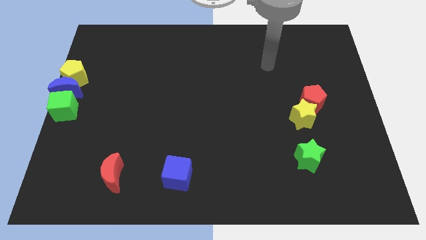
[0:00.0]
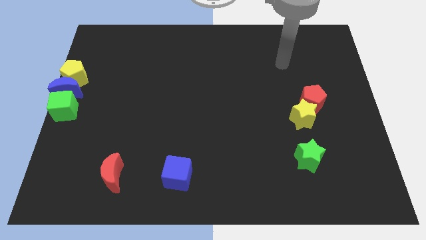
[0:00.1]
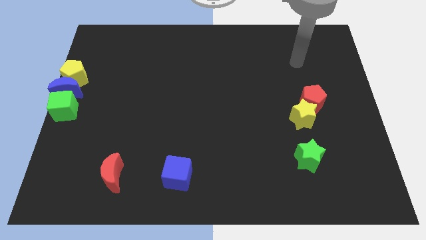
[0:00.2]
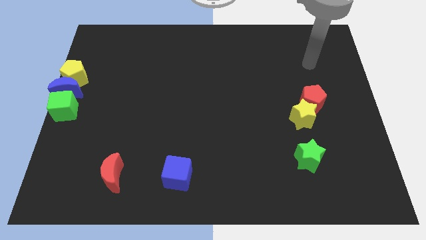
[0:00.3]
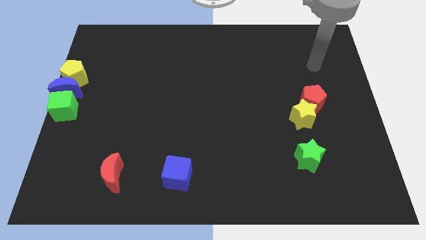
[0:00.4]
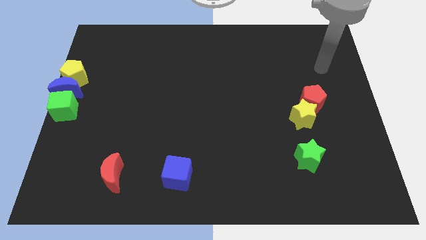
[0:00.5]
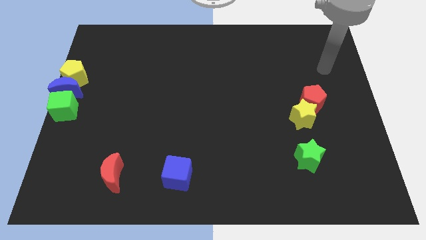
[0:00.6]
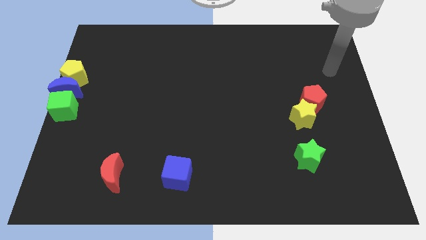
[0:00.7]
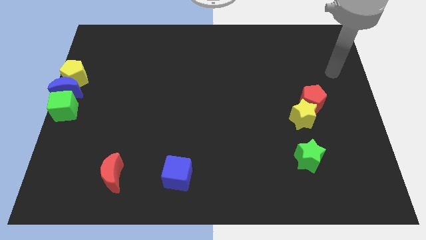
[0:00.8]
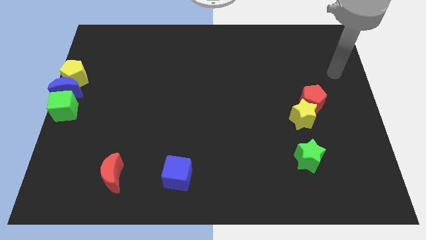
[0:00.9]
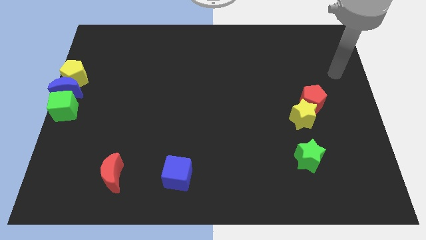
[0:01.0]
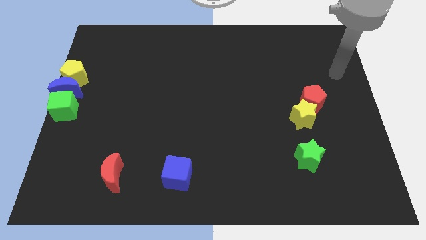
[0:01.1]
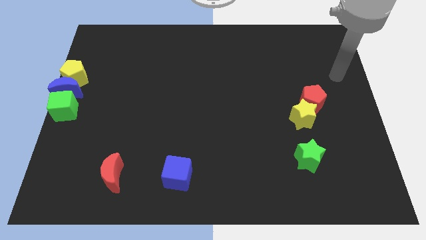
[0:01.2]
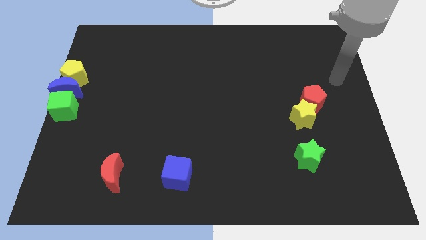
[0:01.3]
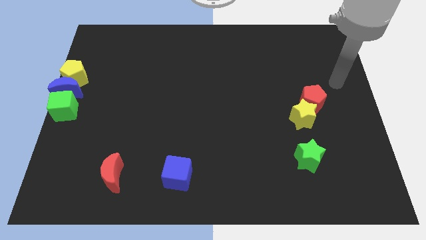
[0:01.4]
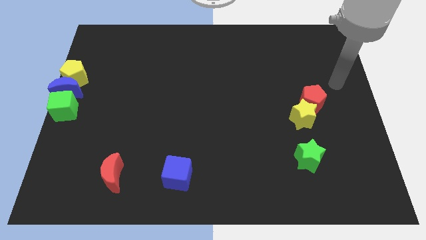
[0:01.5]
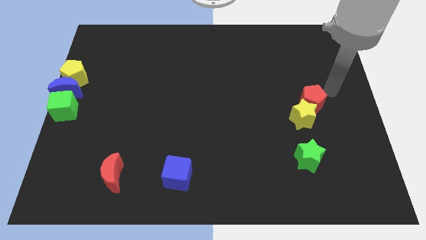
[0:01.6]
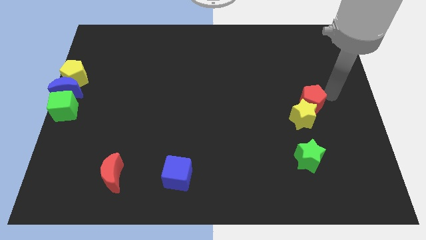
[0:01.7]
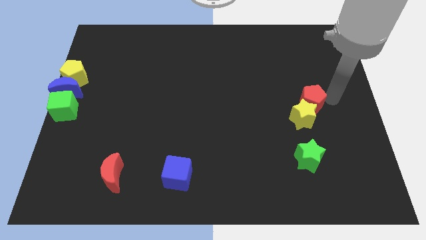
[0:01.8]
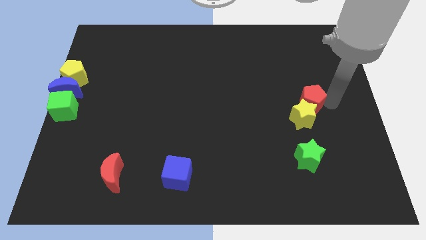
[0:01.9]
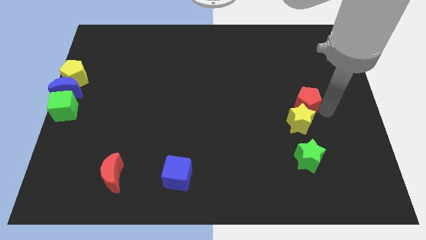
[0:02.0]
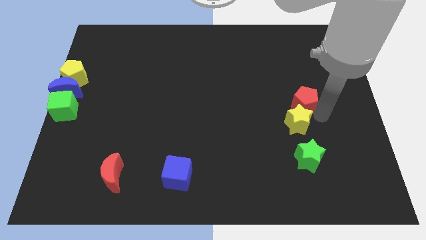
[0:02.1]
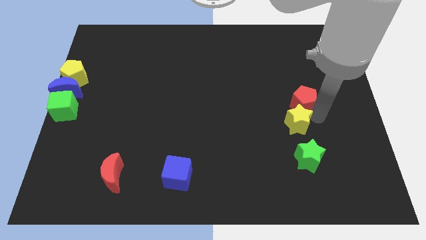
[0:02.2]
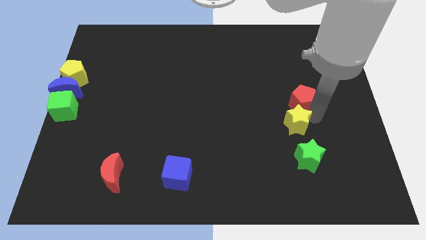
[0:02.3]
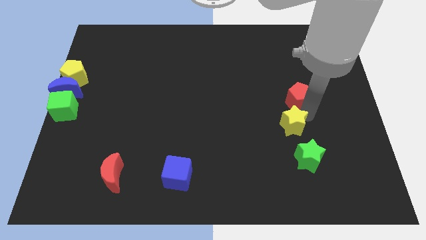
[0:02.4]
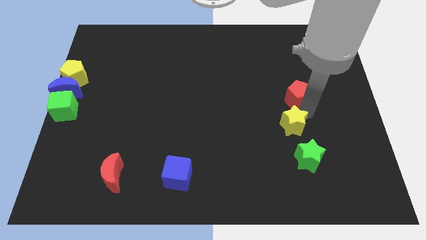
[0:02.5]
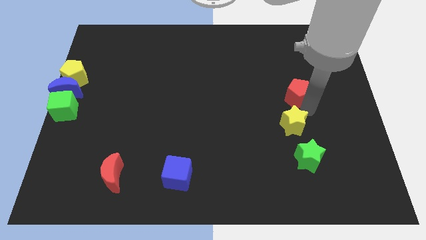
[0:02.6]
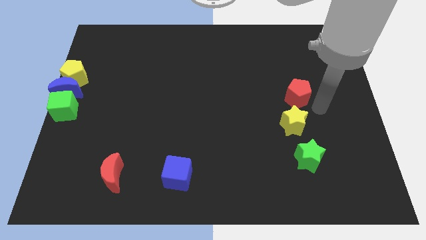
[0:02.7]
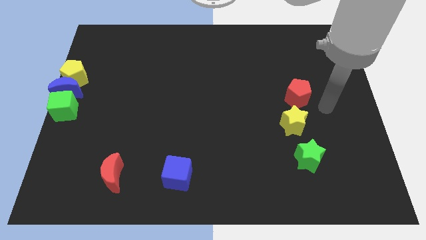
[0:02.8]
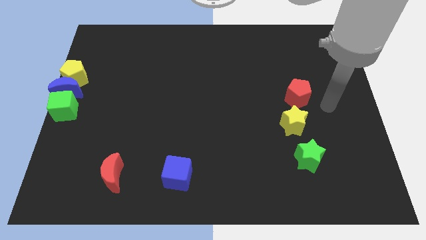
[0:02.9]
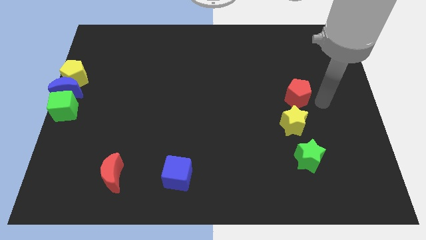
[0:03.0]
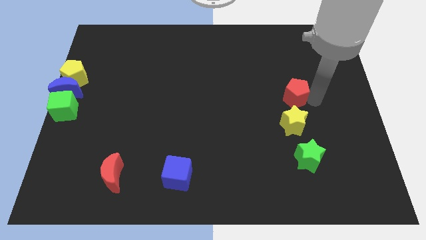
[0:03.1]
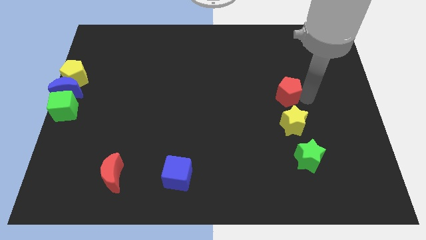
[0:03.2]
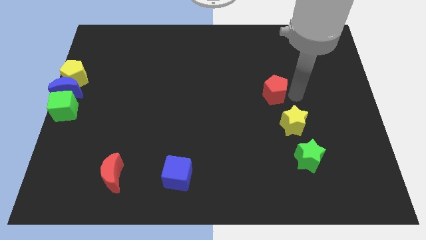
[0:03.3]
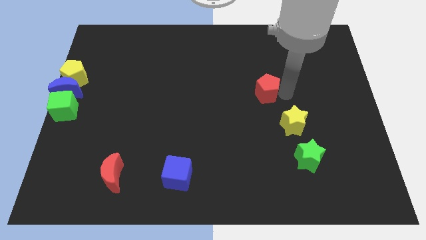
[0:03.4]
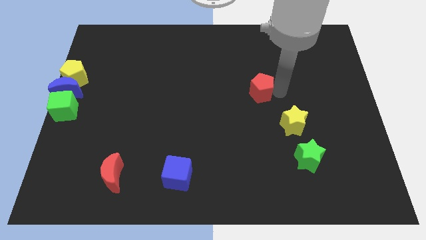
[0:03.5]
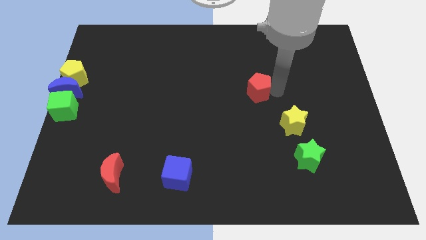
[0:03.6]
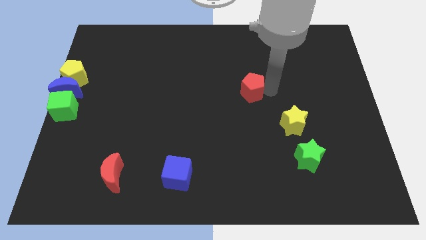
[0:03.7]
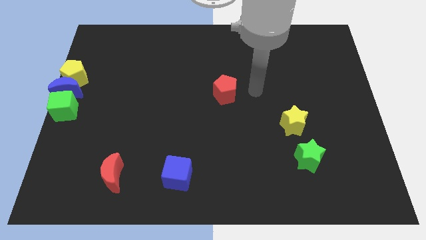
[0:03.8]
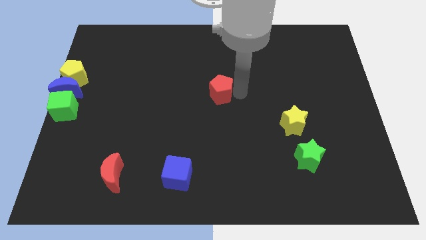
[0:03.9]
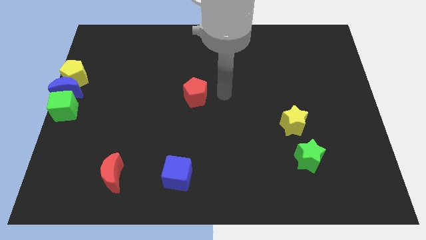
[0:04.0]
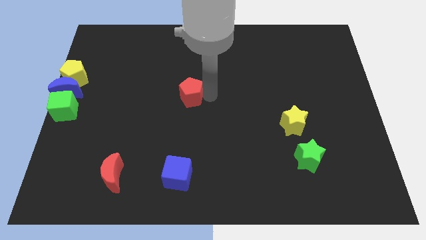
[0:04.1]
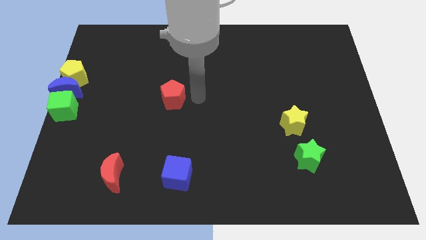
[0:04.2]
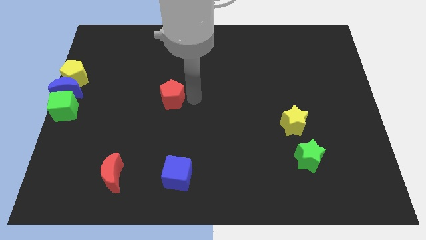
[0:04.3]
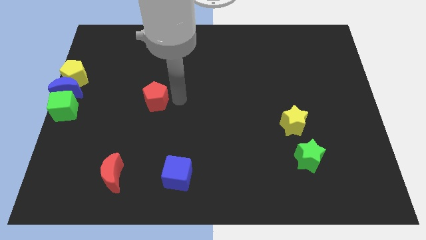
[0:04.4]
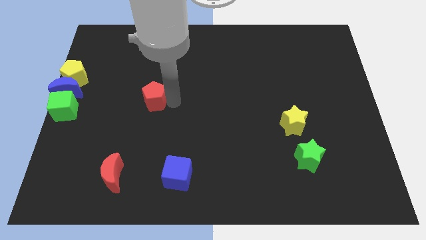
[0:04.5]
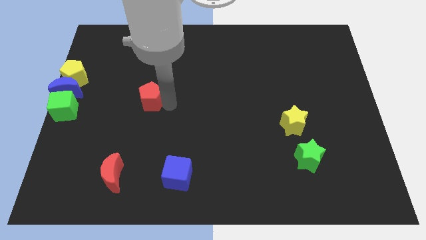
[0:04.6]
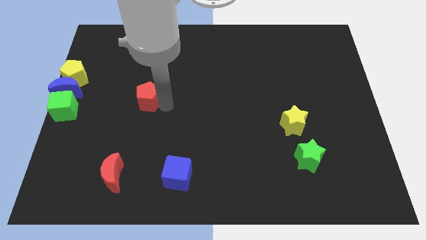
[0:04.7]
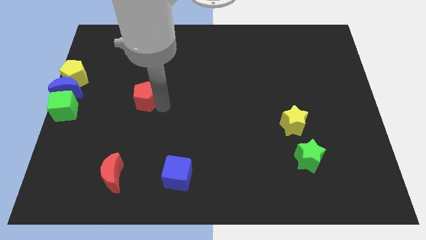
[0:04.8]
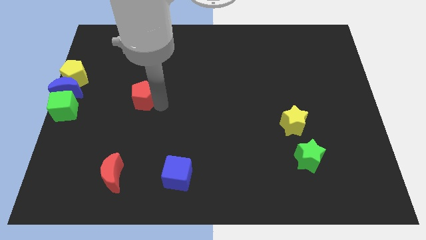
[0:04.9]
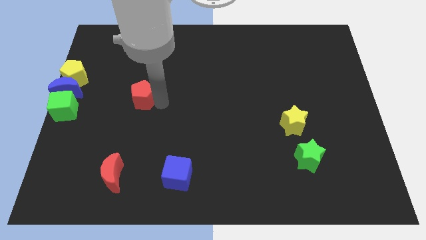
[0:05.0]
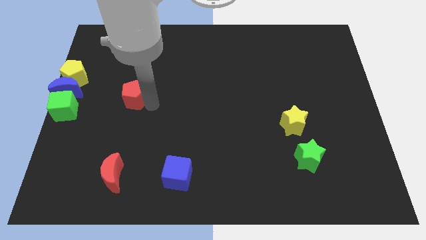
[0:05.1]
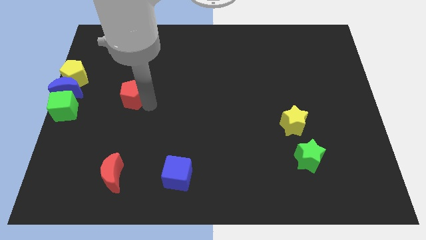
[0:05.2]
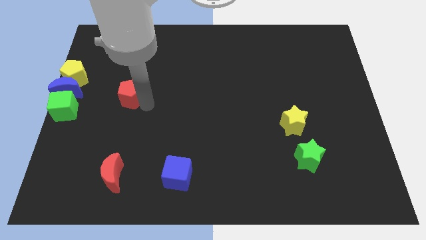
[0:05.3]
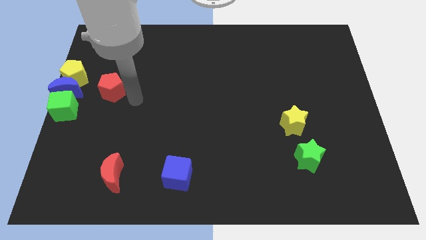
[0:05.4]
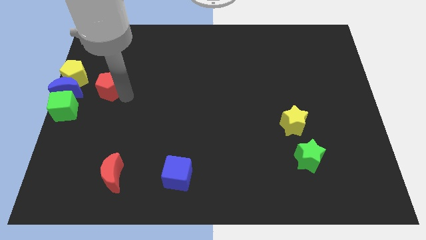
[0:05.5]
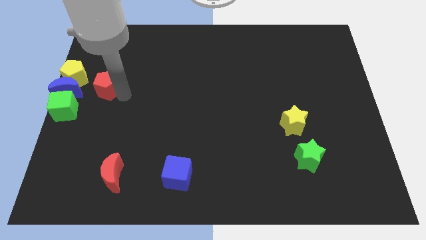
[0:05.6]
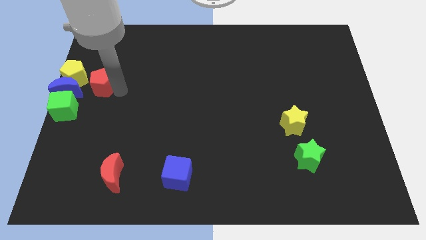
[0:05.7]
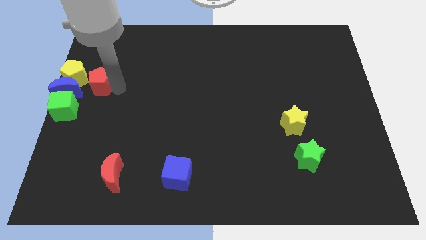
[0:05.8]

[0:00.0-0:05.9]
move the red pentagon away from the yellow star

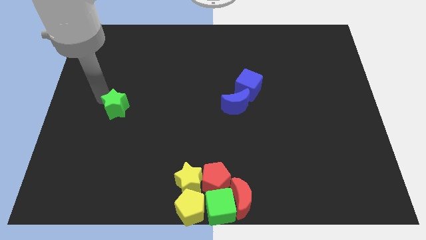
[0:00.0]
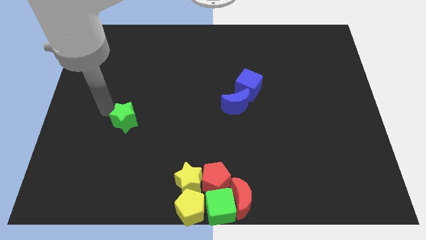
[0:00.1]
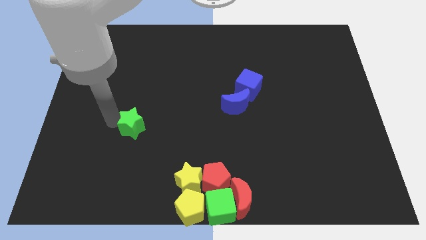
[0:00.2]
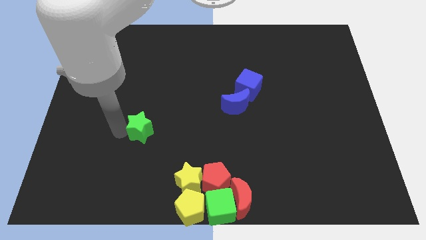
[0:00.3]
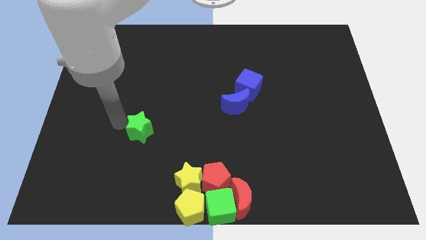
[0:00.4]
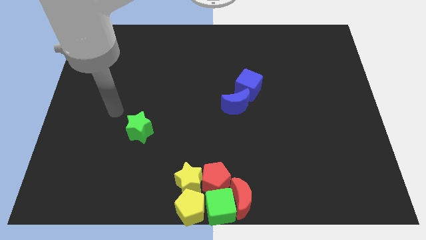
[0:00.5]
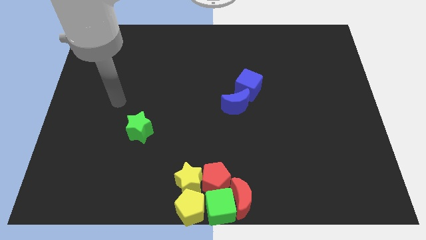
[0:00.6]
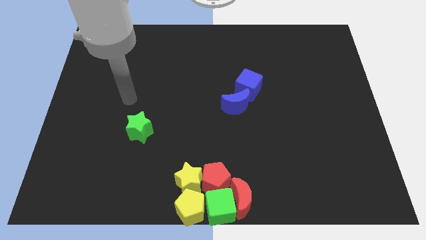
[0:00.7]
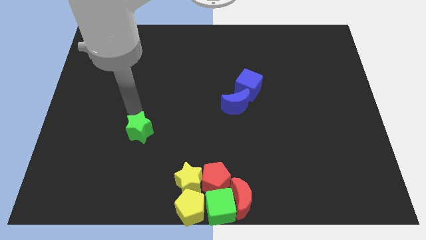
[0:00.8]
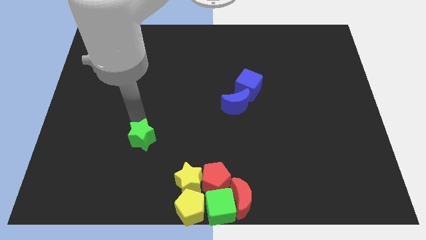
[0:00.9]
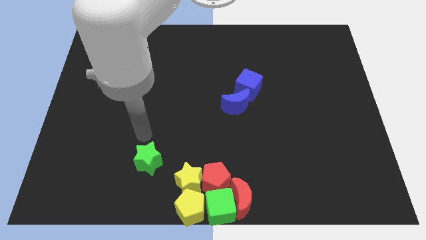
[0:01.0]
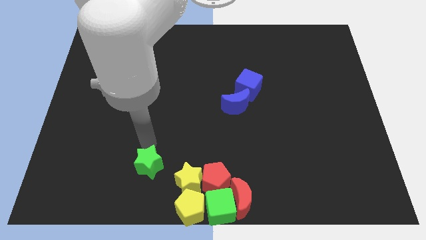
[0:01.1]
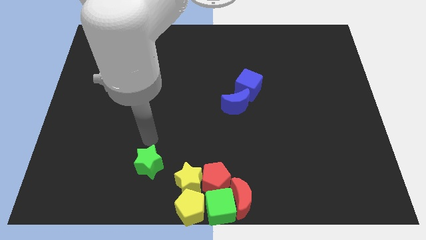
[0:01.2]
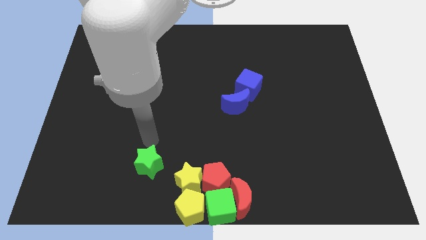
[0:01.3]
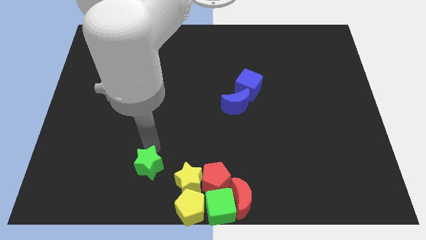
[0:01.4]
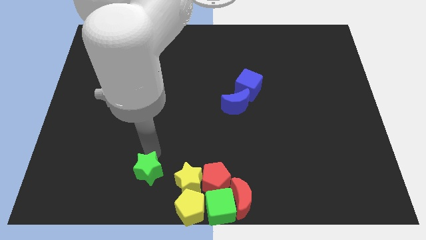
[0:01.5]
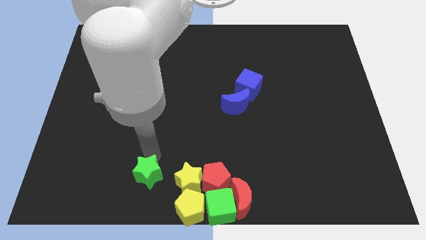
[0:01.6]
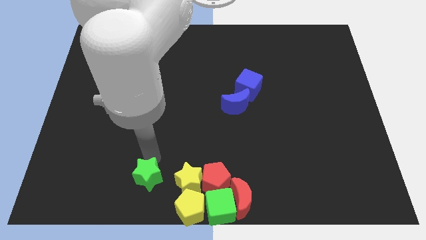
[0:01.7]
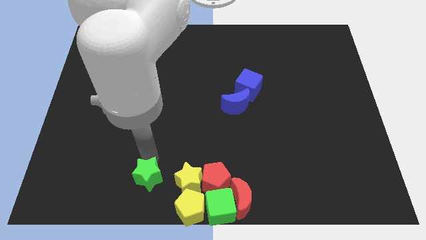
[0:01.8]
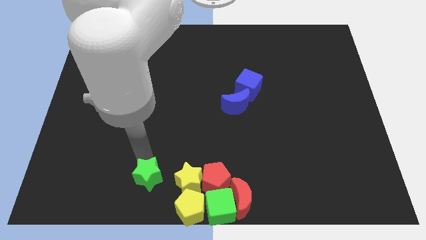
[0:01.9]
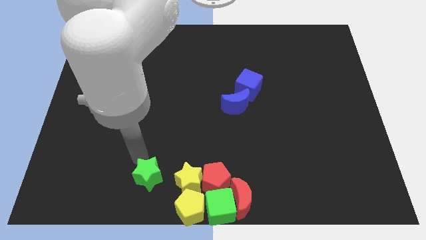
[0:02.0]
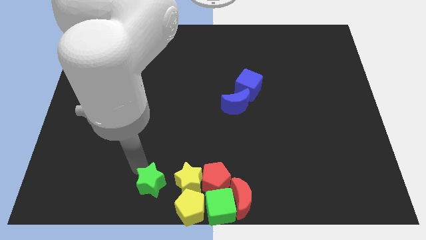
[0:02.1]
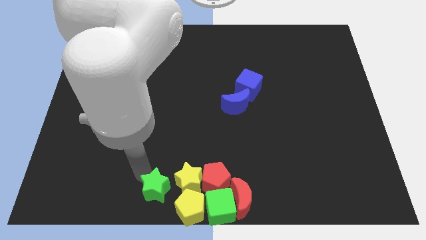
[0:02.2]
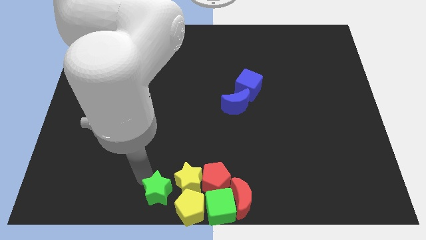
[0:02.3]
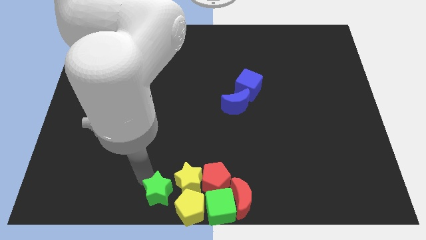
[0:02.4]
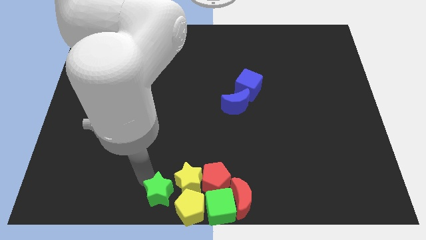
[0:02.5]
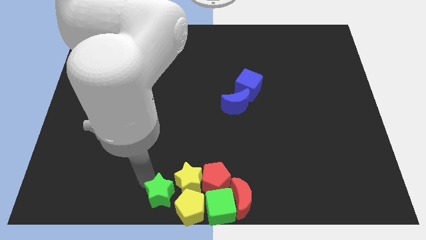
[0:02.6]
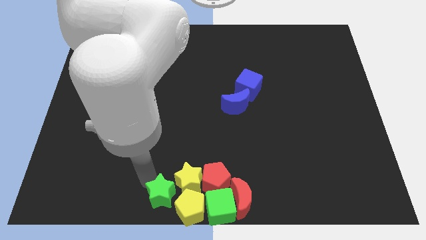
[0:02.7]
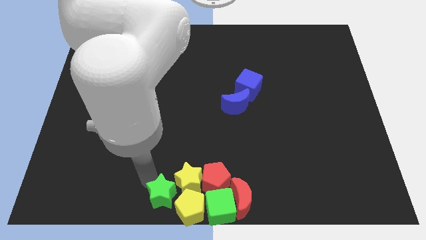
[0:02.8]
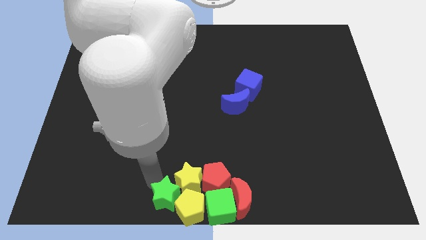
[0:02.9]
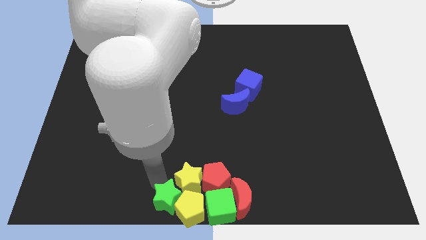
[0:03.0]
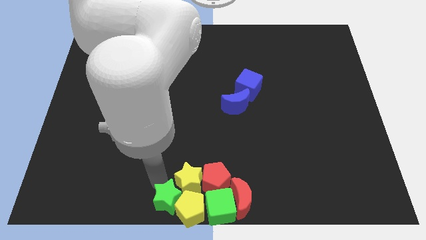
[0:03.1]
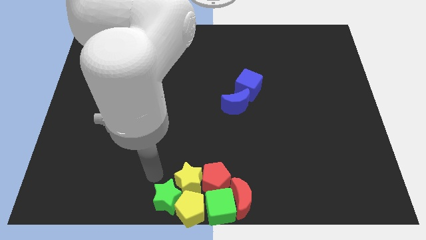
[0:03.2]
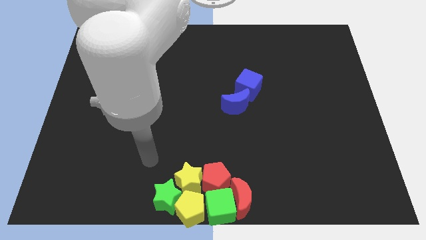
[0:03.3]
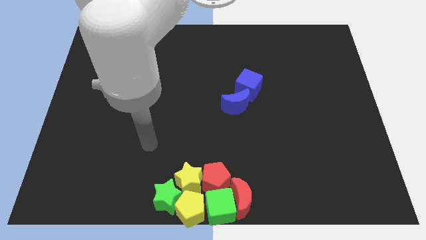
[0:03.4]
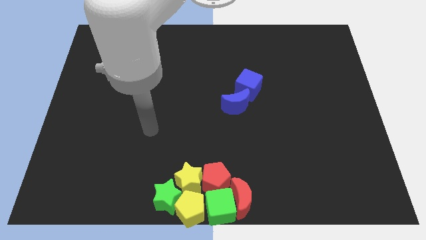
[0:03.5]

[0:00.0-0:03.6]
move the green star into the yellow pentagon
